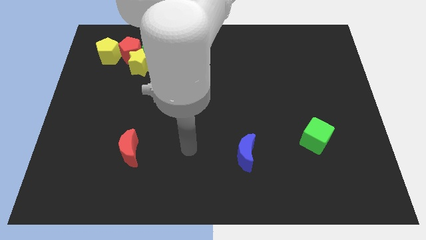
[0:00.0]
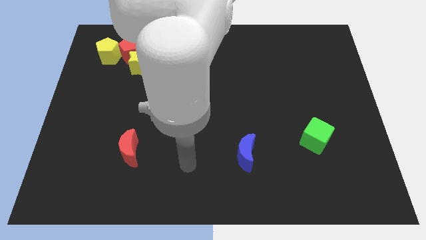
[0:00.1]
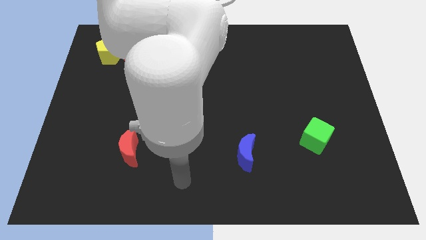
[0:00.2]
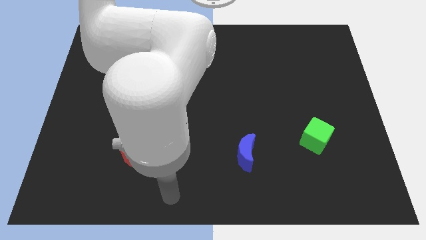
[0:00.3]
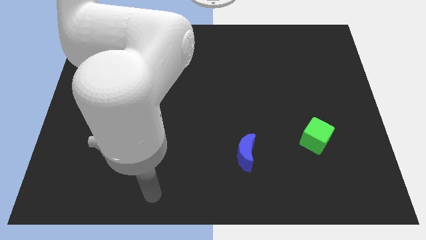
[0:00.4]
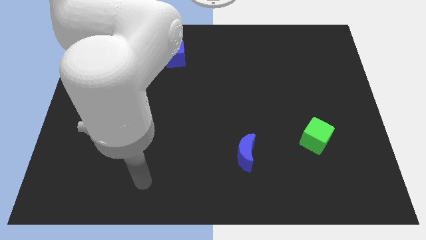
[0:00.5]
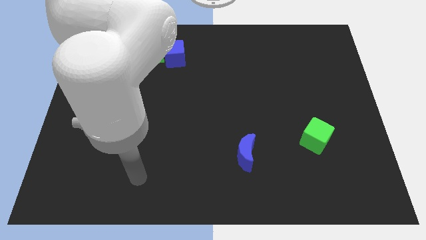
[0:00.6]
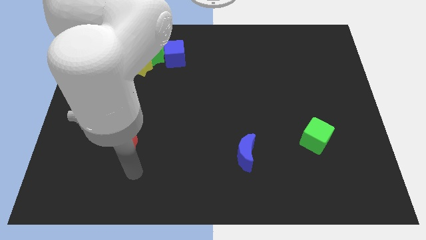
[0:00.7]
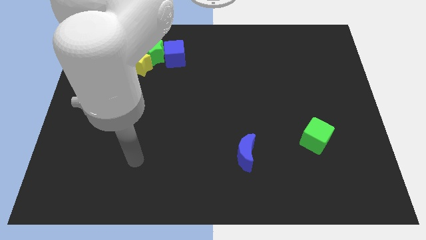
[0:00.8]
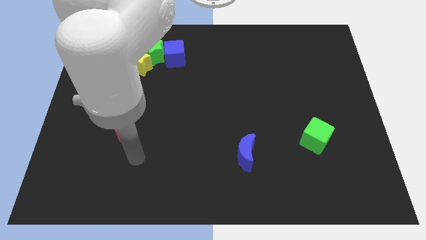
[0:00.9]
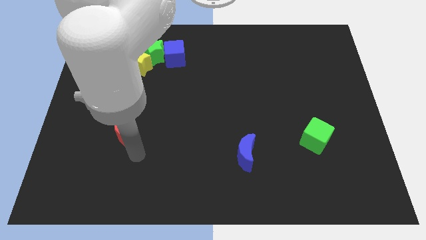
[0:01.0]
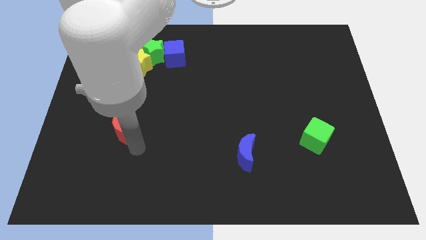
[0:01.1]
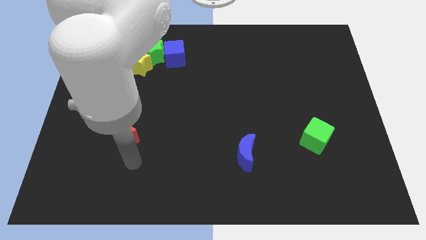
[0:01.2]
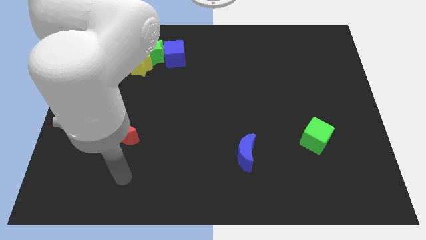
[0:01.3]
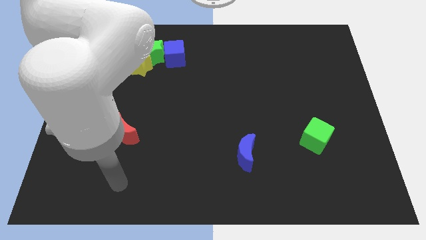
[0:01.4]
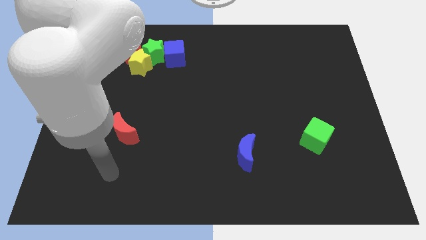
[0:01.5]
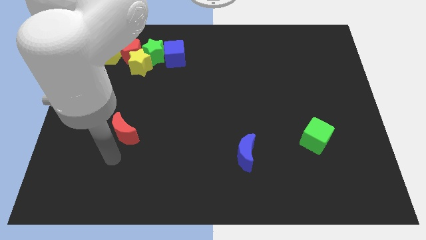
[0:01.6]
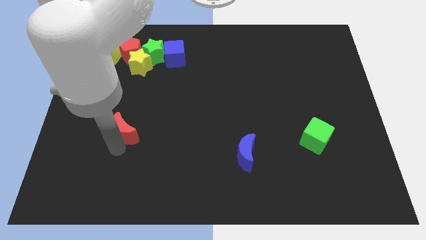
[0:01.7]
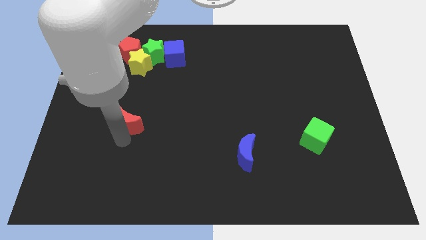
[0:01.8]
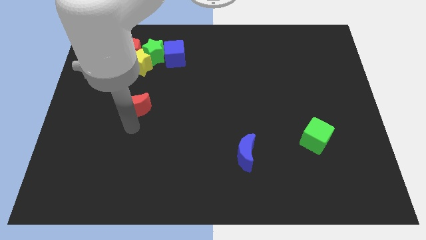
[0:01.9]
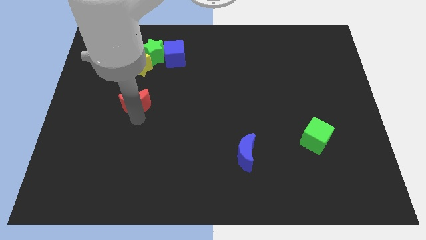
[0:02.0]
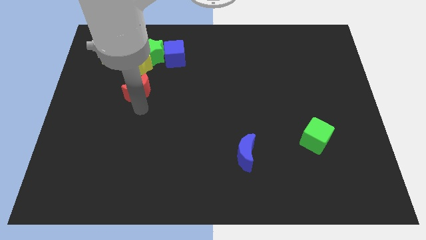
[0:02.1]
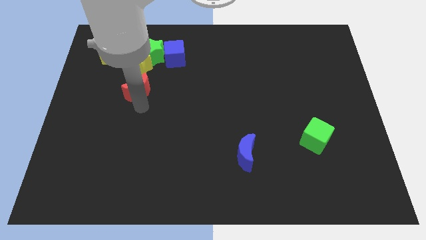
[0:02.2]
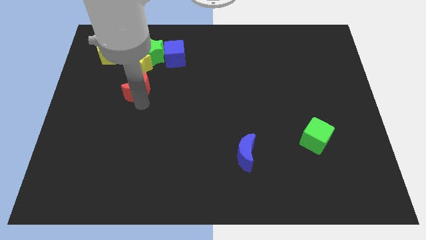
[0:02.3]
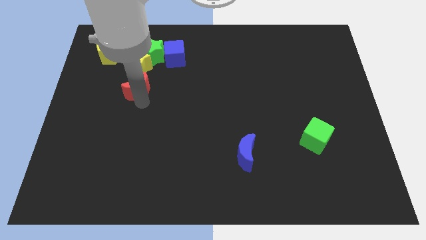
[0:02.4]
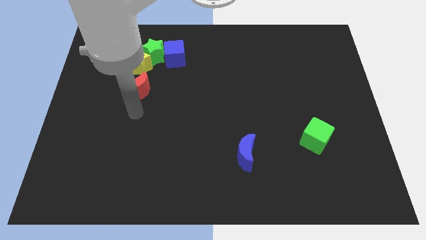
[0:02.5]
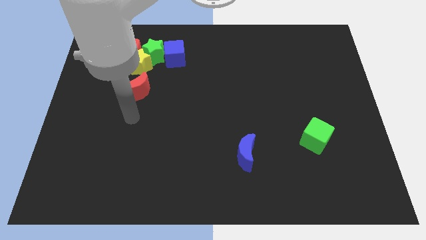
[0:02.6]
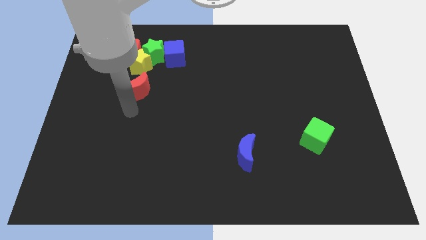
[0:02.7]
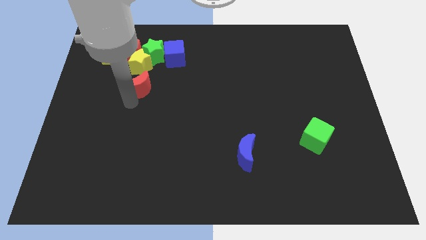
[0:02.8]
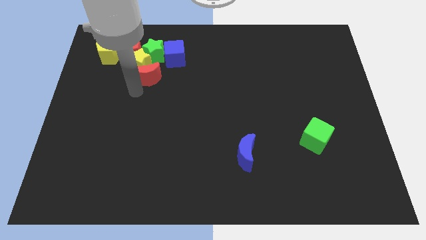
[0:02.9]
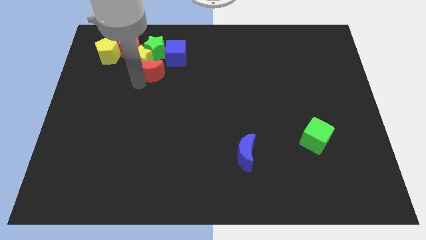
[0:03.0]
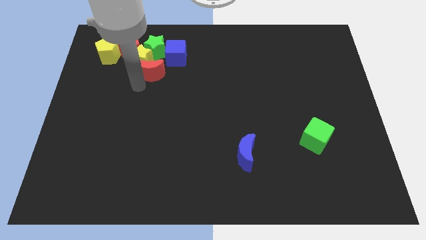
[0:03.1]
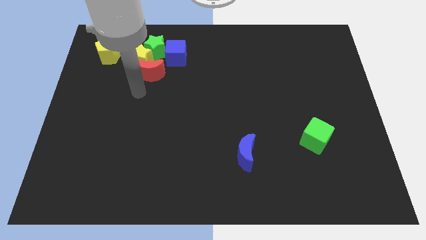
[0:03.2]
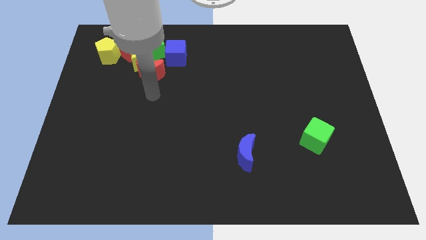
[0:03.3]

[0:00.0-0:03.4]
push the red crescent into the group of blocks

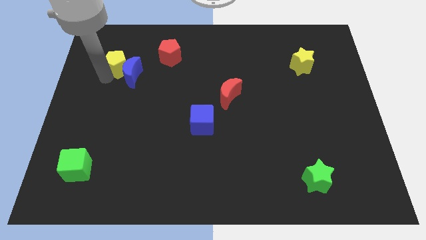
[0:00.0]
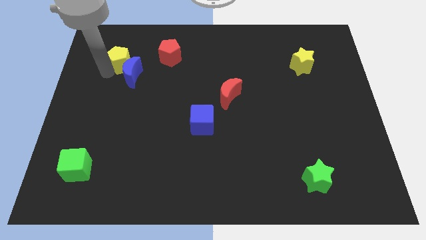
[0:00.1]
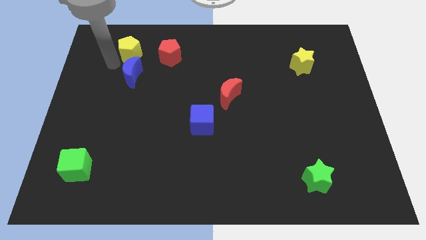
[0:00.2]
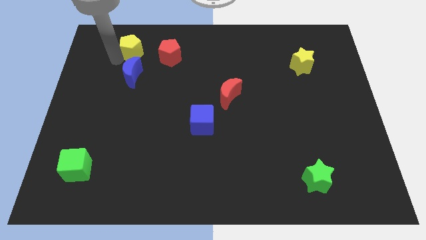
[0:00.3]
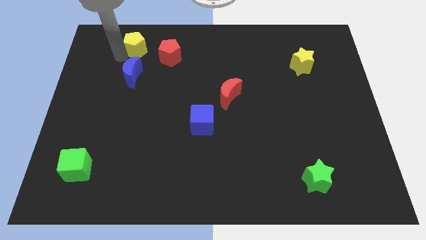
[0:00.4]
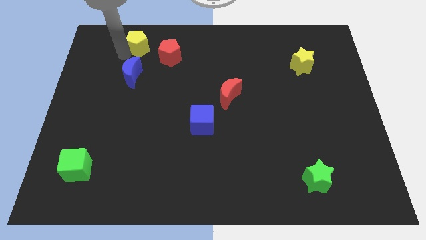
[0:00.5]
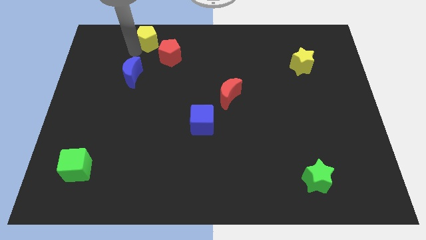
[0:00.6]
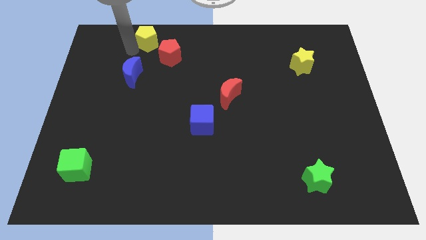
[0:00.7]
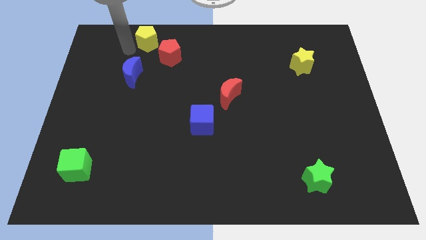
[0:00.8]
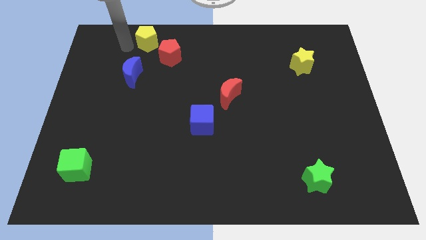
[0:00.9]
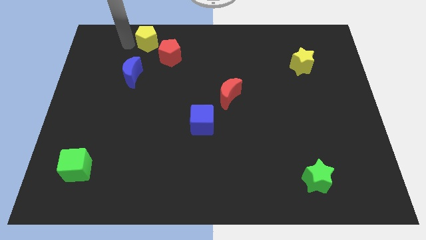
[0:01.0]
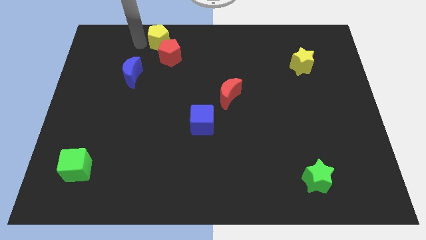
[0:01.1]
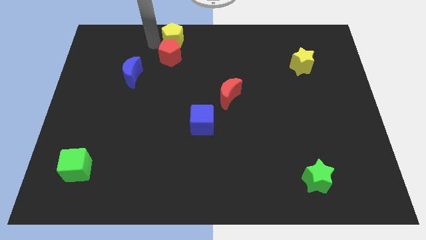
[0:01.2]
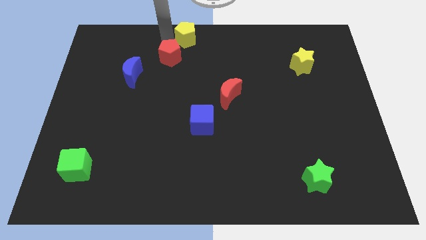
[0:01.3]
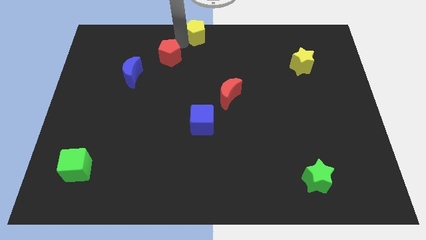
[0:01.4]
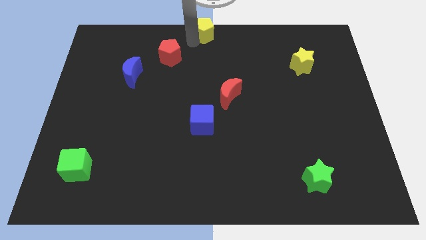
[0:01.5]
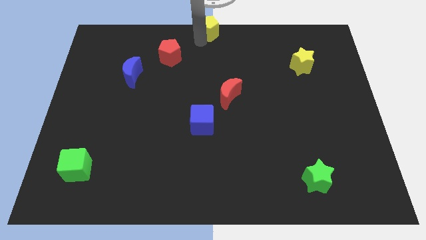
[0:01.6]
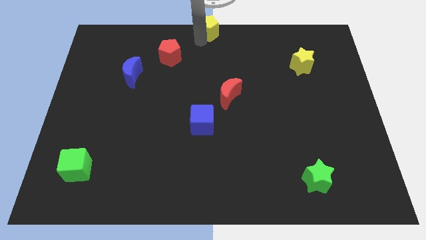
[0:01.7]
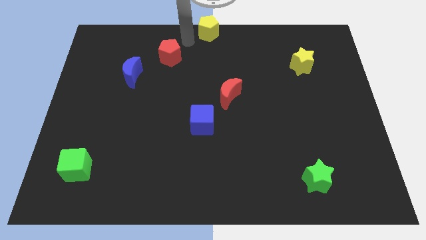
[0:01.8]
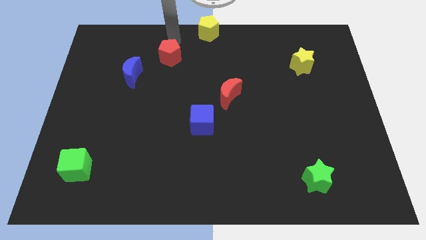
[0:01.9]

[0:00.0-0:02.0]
move the yellow pentagon to the top center of the board

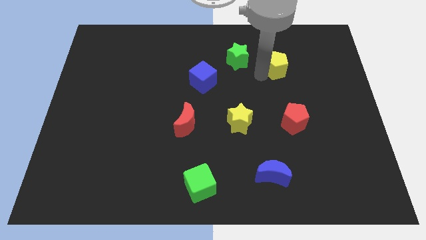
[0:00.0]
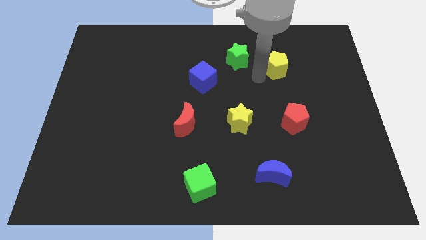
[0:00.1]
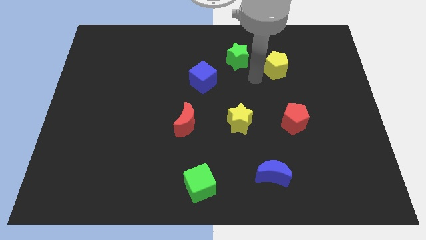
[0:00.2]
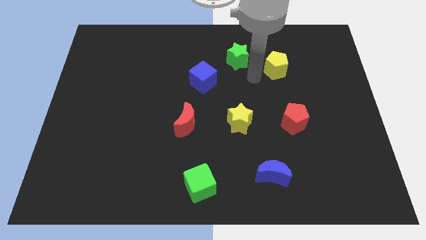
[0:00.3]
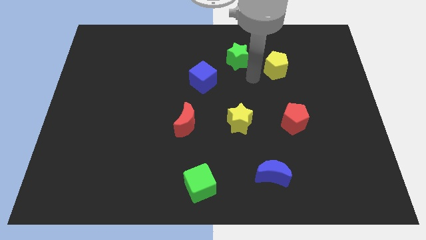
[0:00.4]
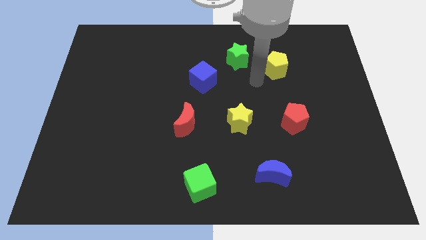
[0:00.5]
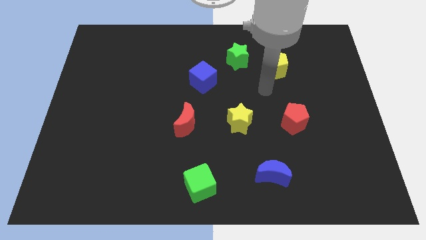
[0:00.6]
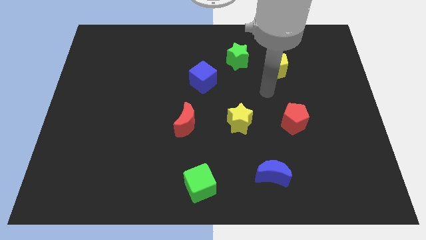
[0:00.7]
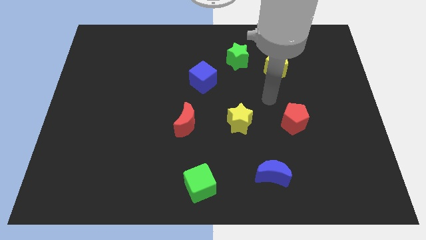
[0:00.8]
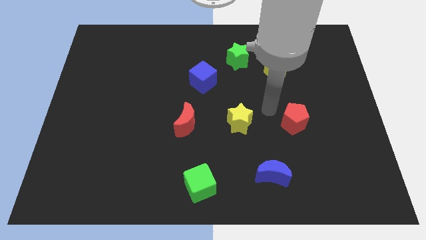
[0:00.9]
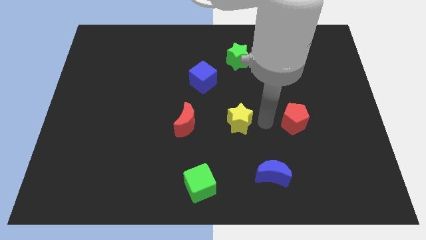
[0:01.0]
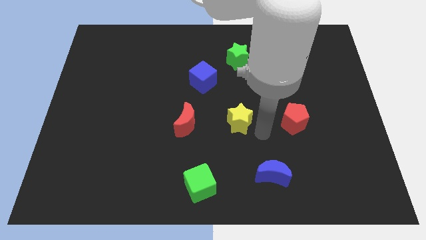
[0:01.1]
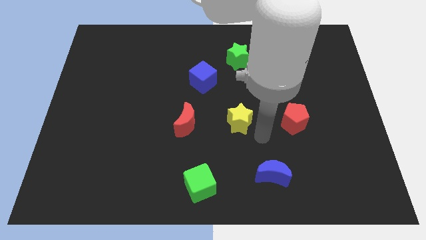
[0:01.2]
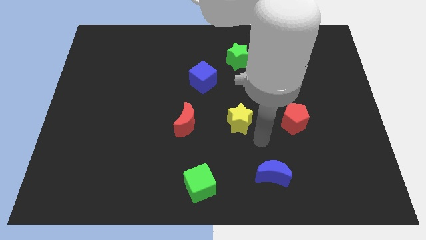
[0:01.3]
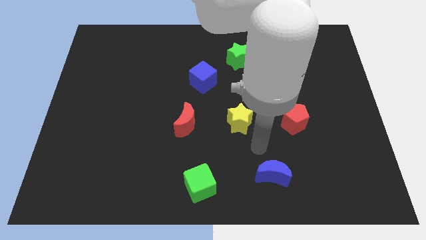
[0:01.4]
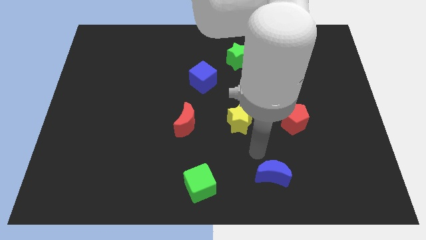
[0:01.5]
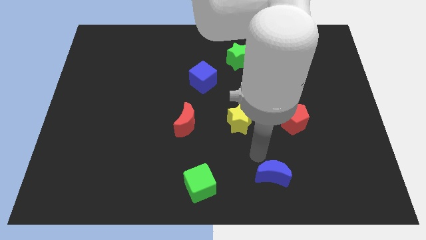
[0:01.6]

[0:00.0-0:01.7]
move your arm towards the blue crescent

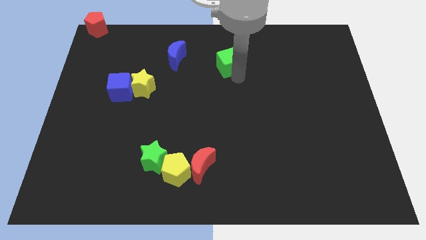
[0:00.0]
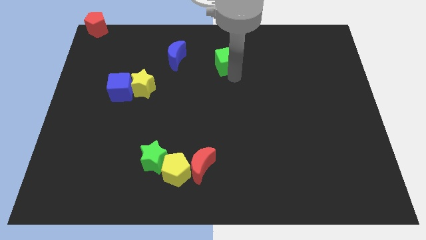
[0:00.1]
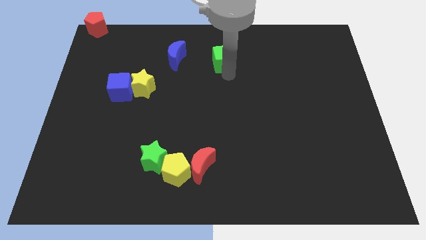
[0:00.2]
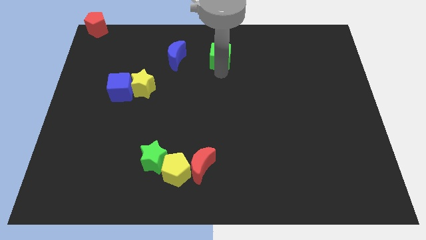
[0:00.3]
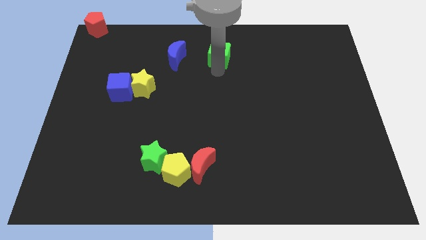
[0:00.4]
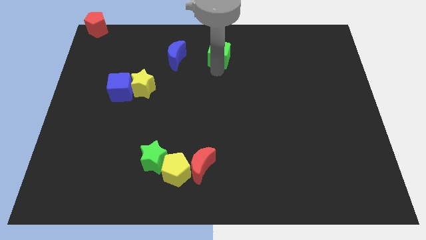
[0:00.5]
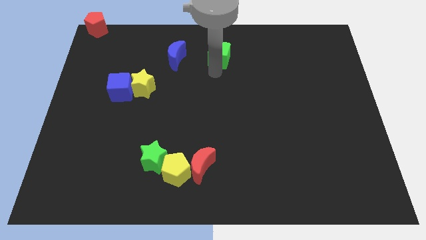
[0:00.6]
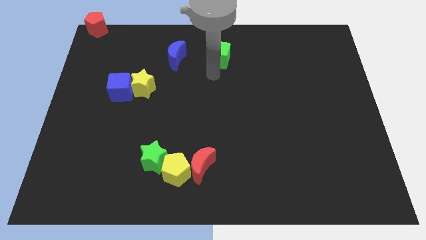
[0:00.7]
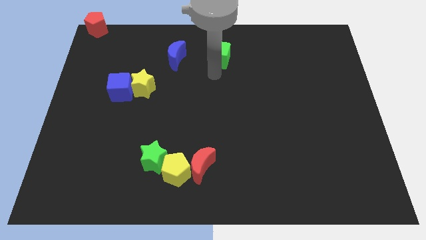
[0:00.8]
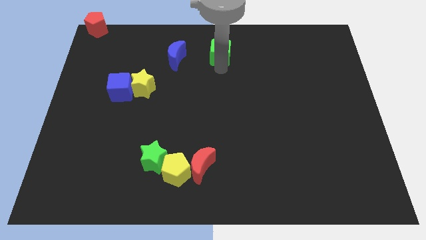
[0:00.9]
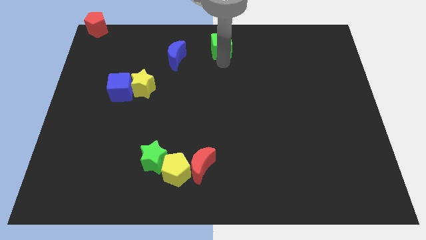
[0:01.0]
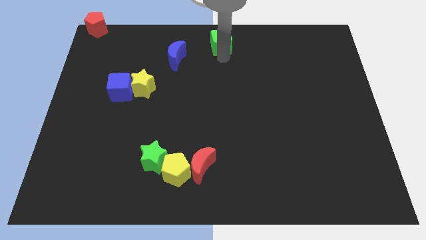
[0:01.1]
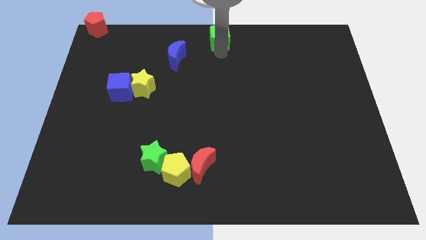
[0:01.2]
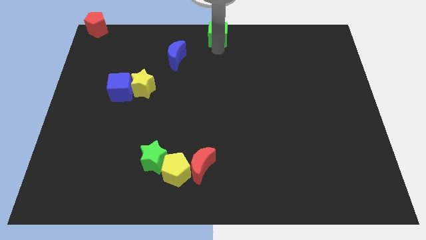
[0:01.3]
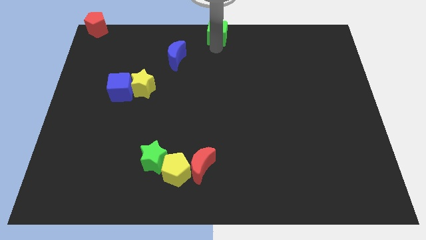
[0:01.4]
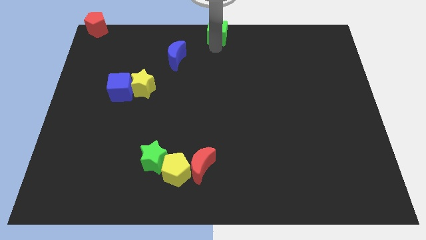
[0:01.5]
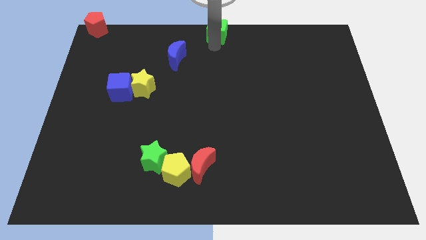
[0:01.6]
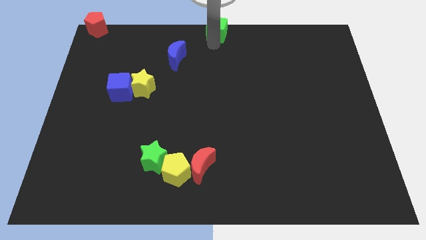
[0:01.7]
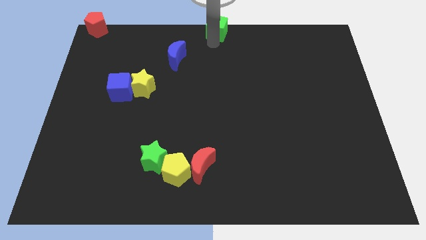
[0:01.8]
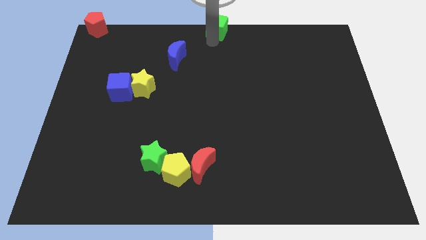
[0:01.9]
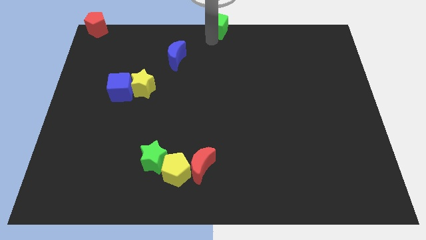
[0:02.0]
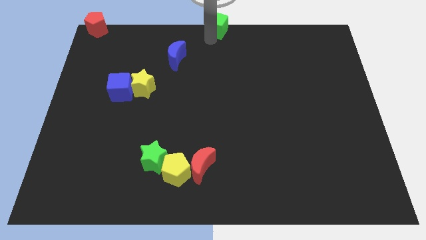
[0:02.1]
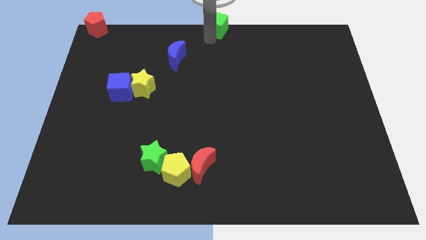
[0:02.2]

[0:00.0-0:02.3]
place green cube to the top center of the board
